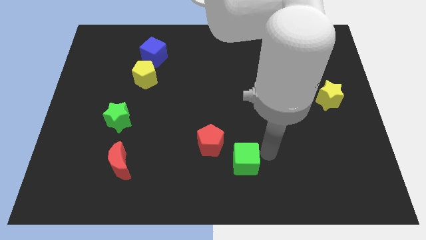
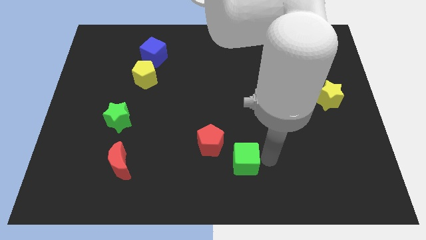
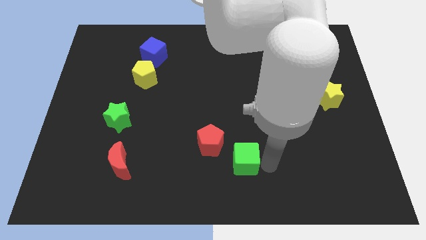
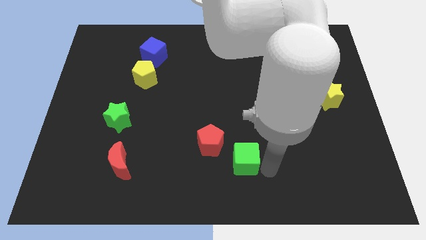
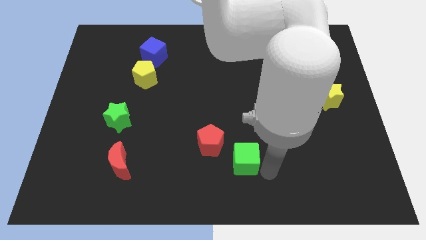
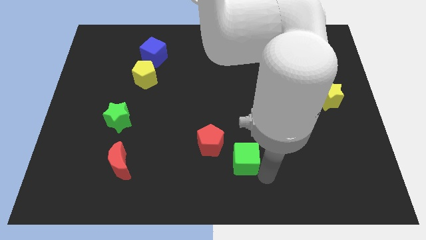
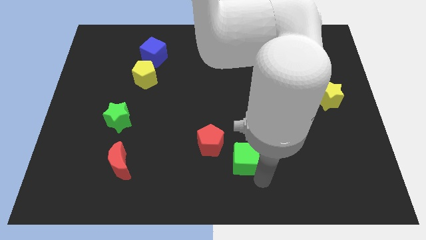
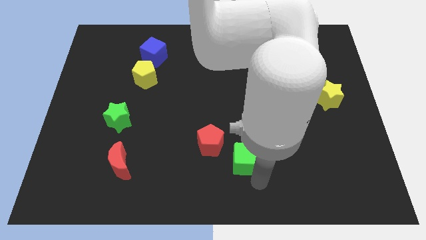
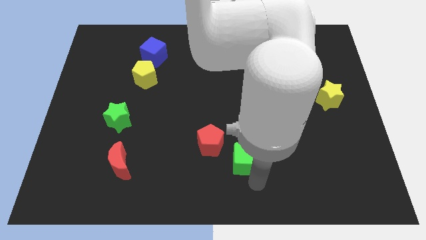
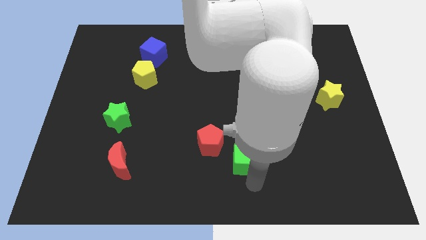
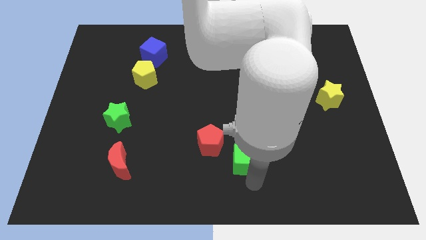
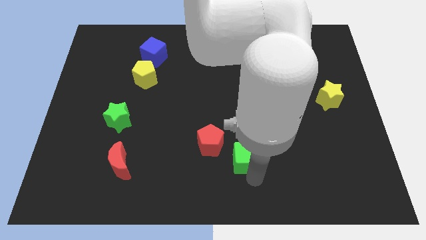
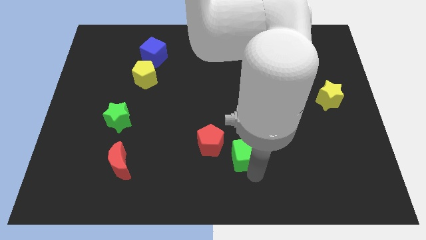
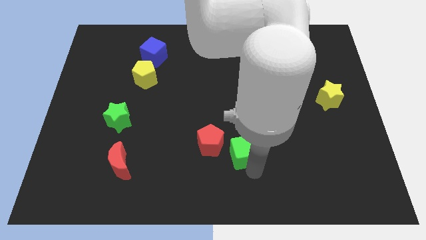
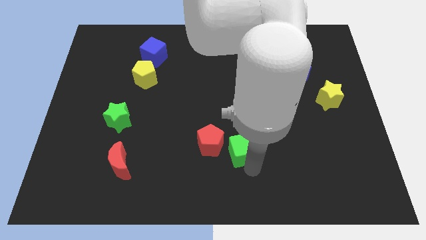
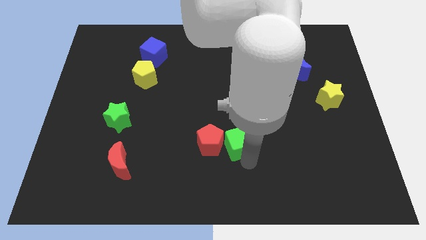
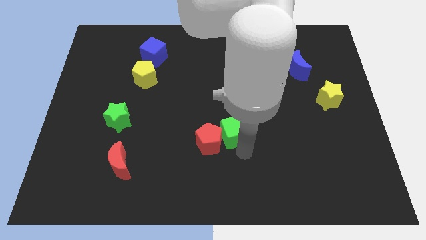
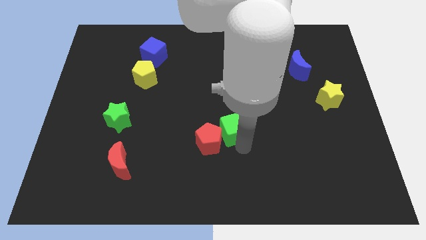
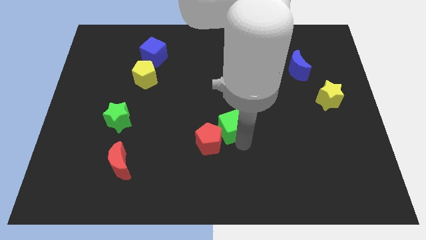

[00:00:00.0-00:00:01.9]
move green cube into red pentagon

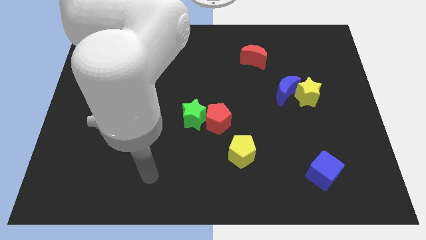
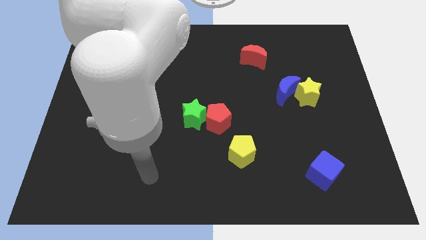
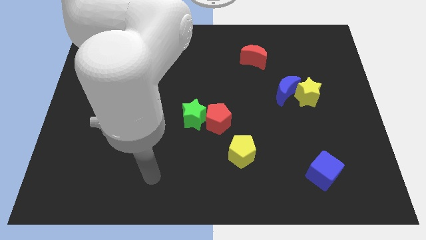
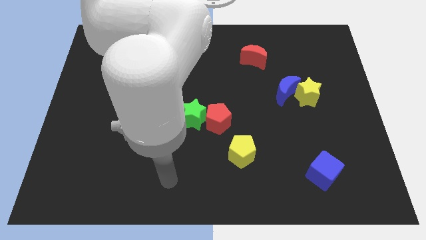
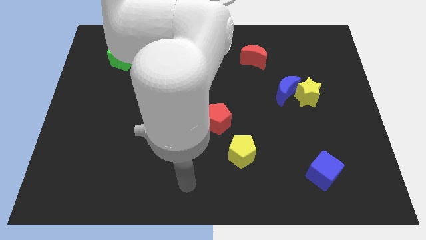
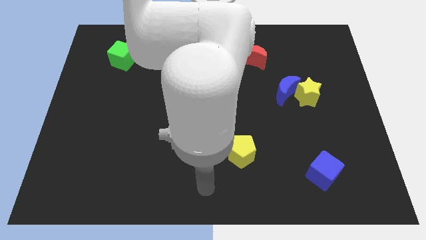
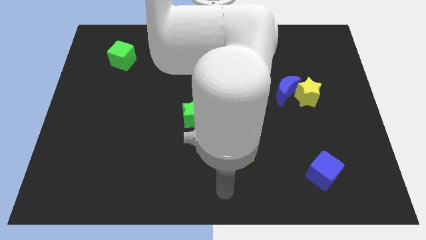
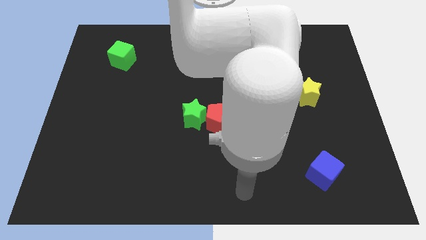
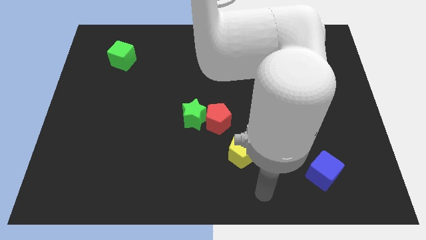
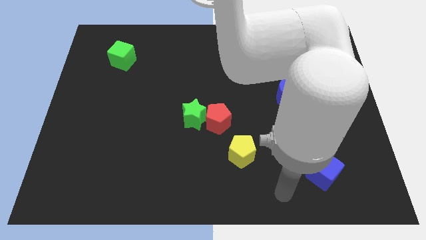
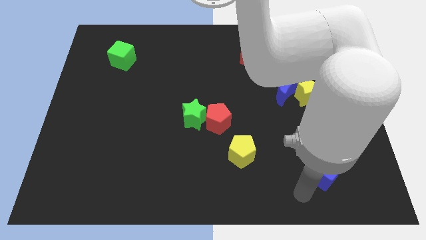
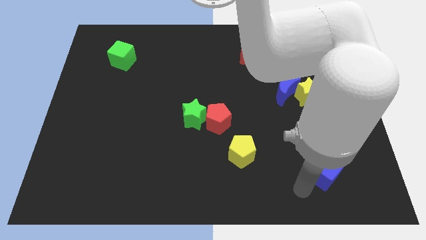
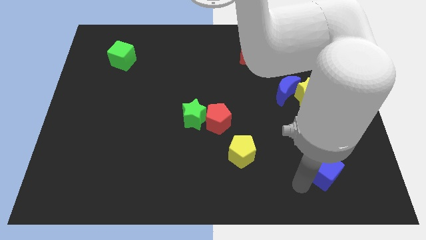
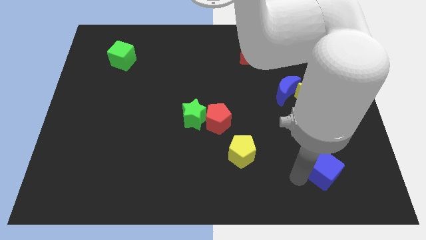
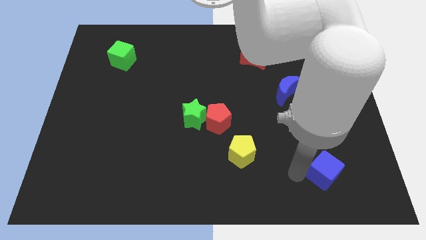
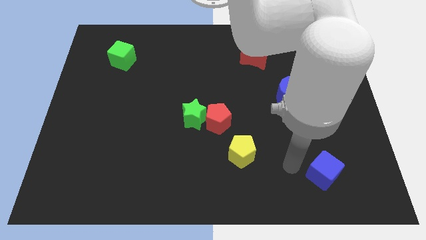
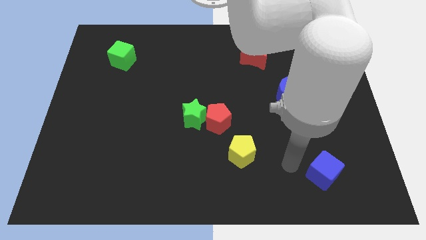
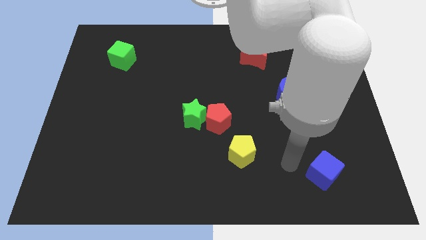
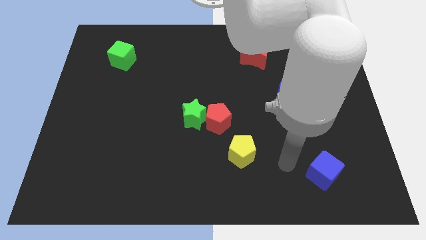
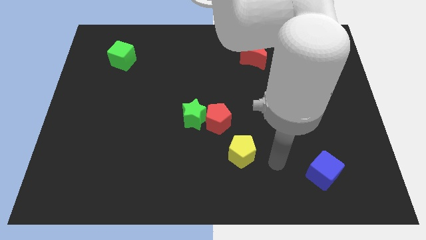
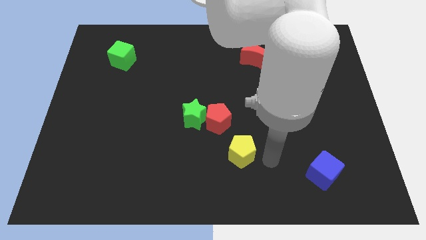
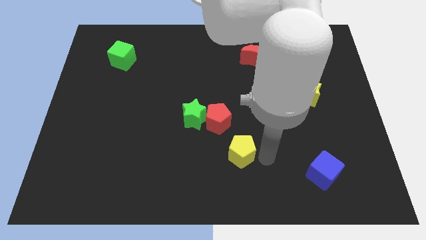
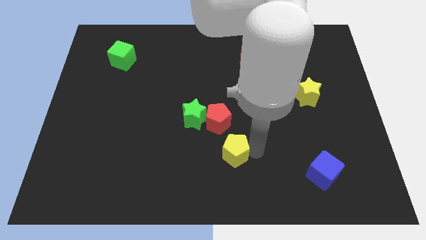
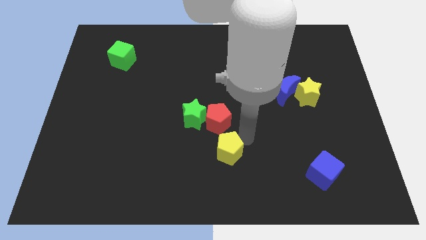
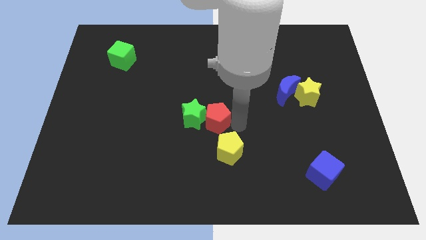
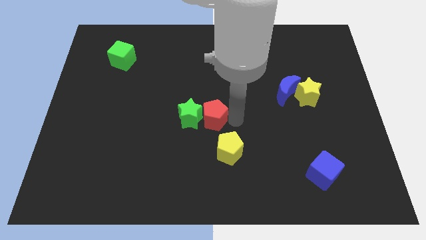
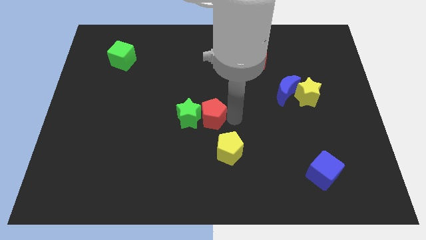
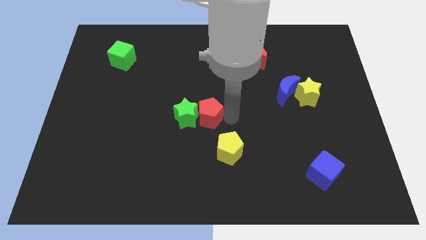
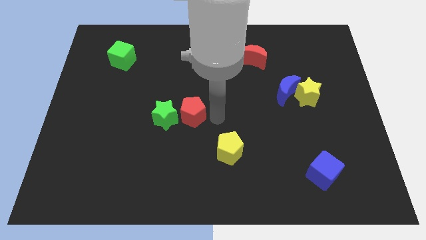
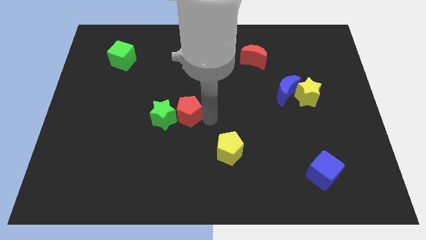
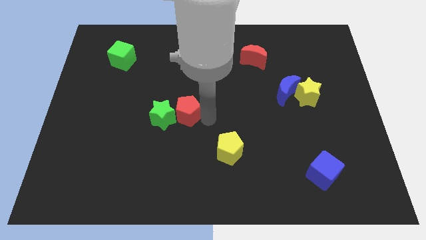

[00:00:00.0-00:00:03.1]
push the red pentagon into the green star

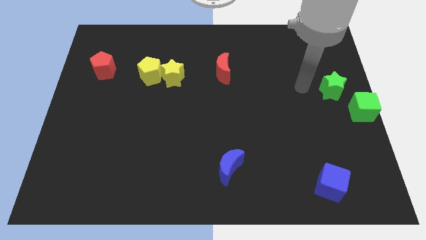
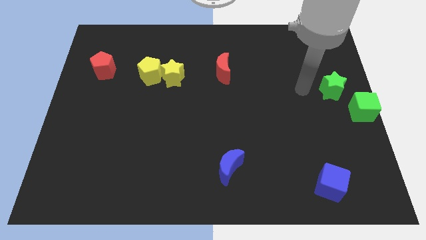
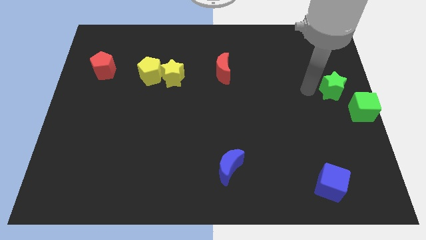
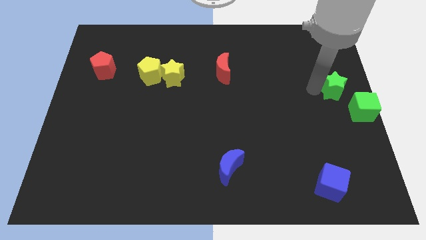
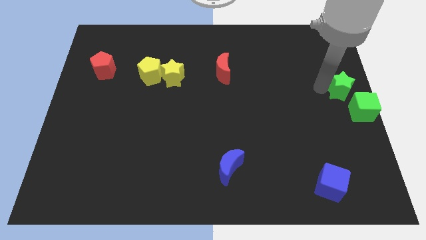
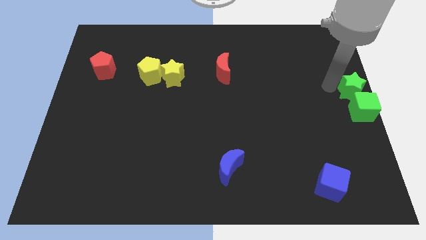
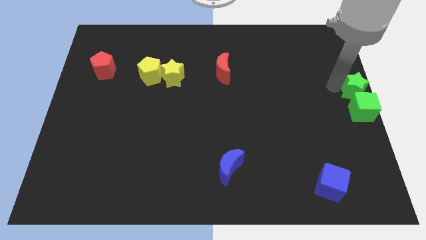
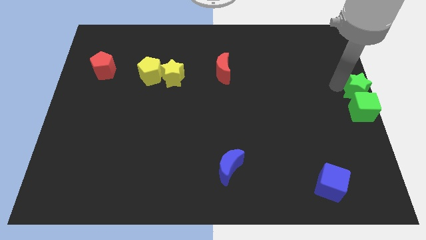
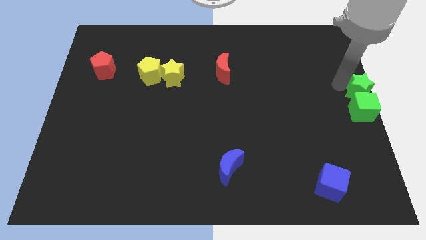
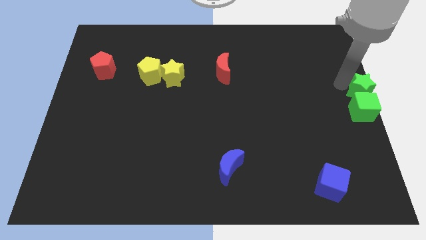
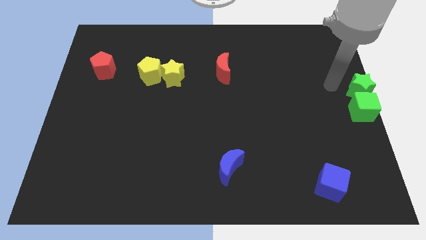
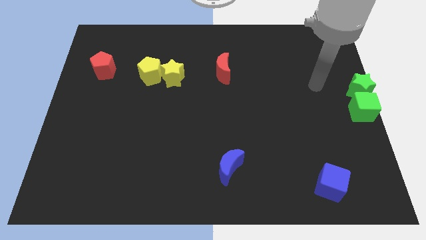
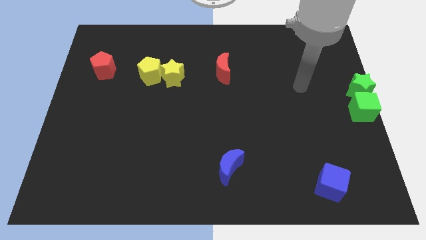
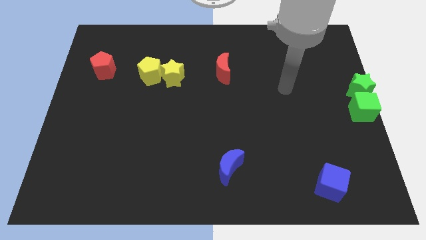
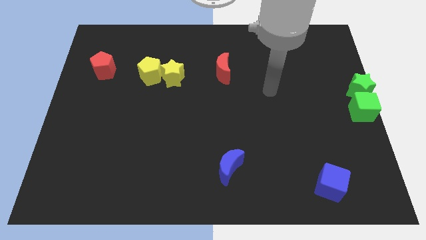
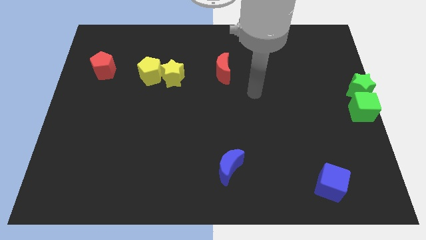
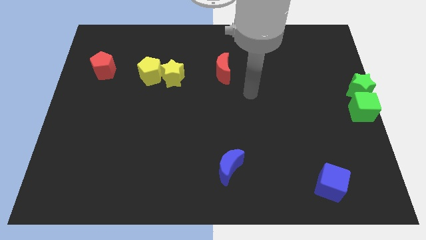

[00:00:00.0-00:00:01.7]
move green star into the green cube

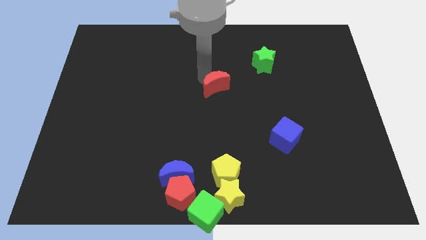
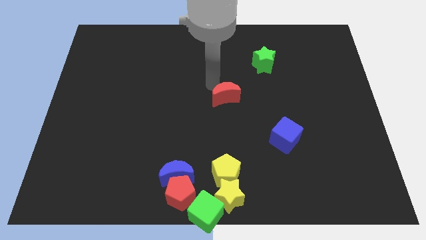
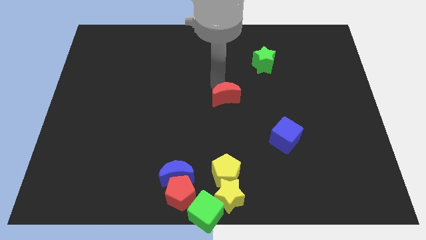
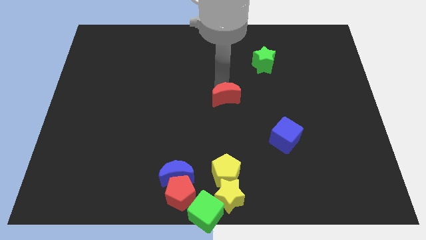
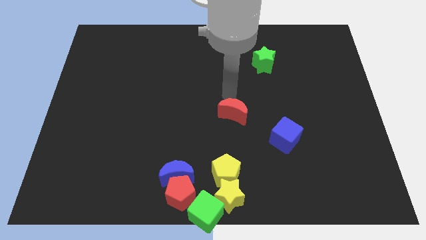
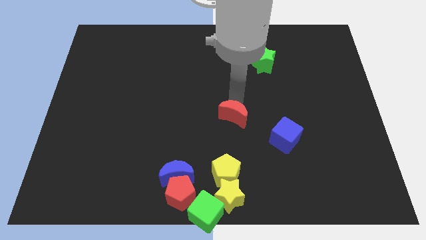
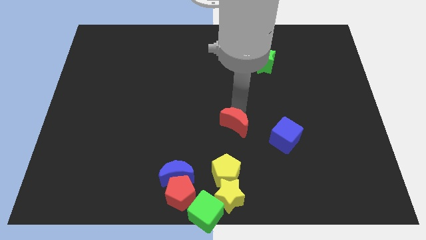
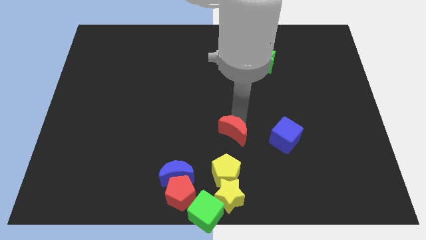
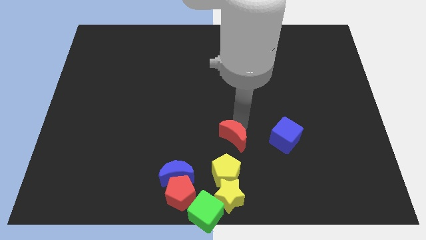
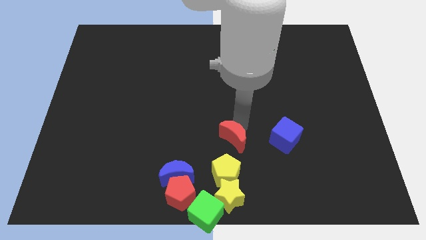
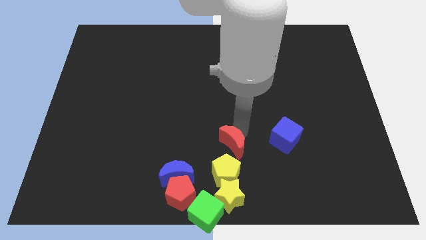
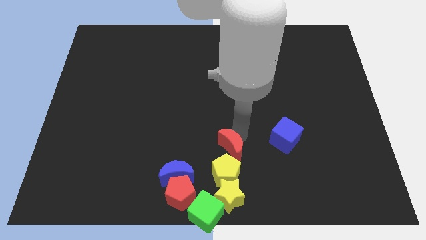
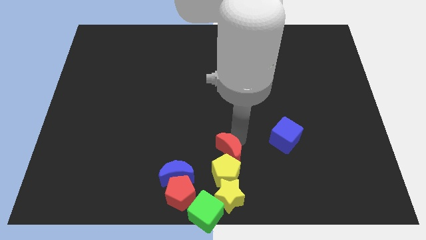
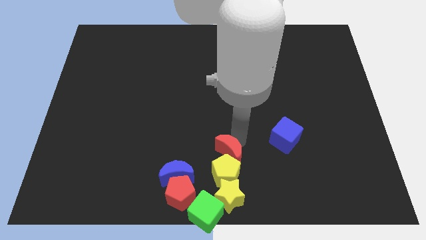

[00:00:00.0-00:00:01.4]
push red crescent to the top of the yellow pentagon

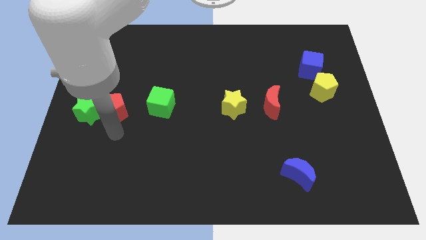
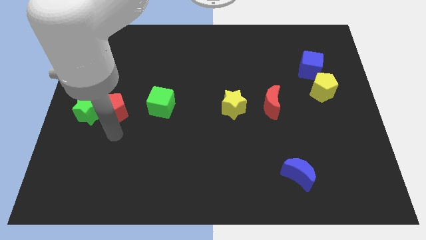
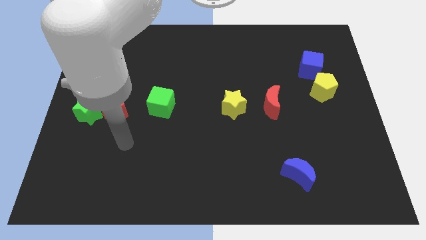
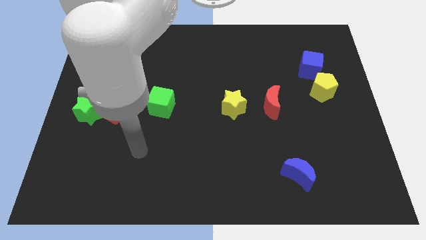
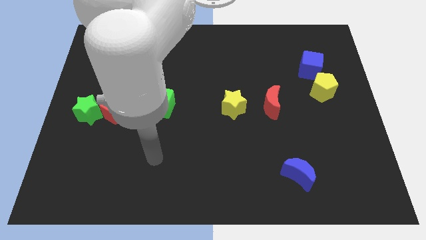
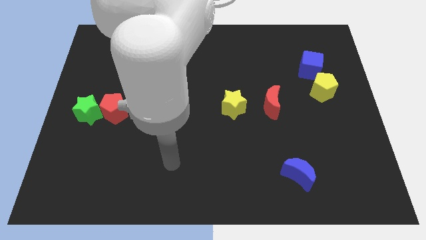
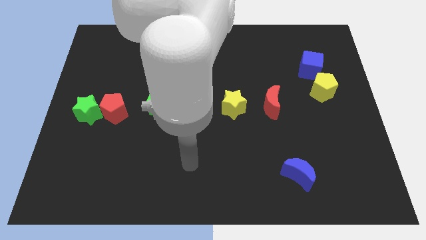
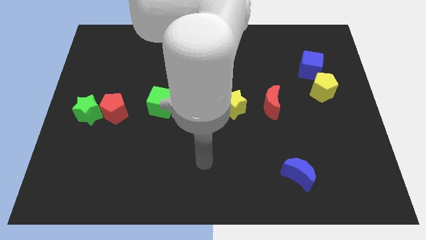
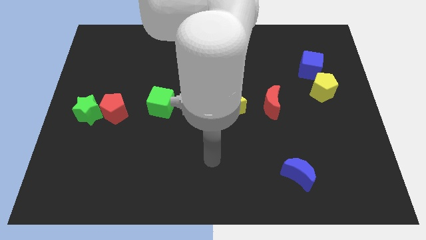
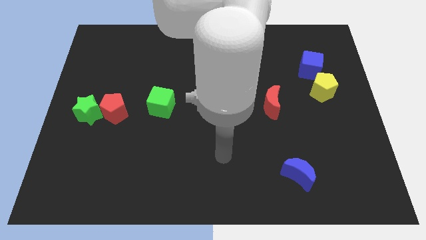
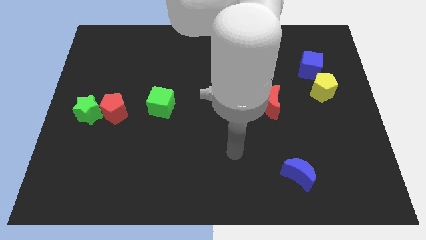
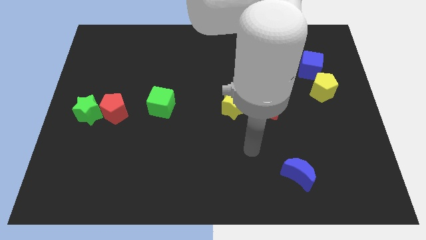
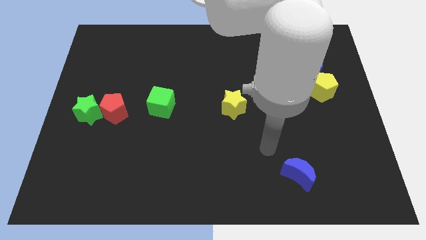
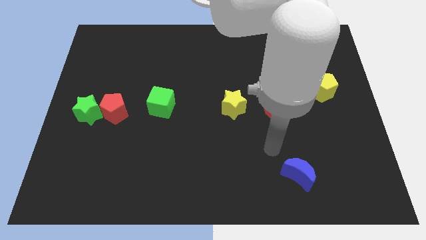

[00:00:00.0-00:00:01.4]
slide your arm towards the bottom right
